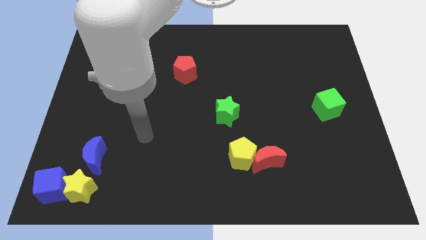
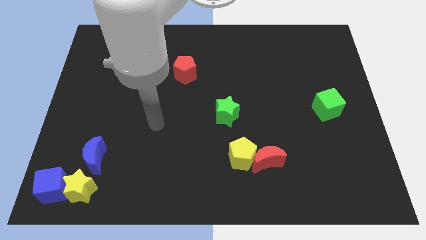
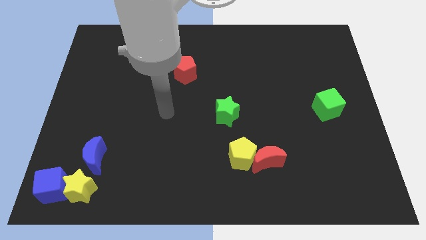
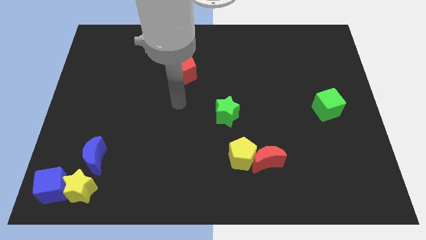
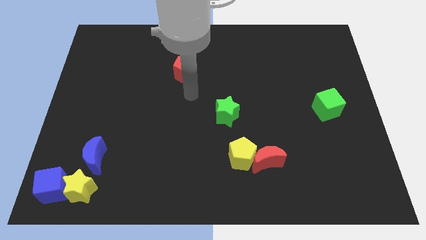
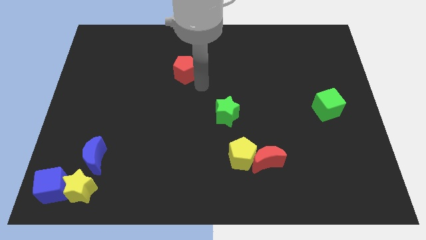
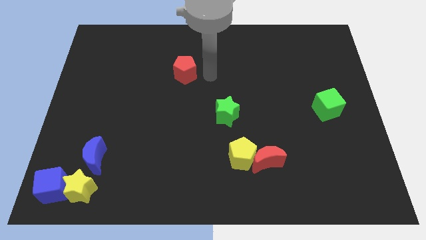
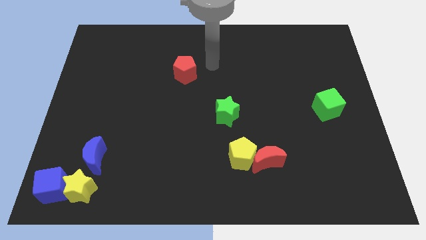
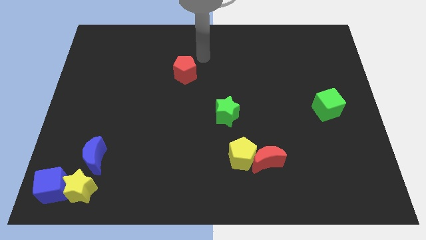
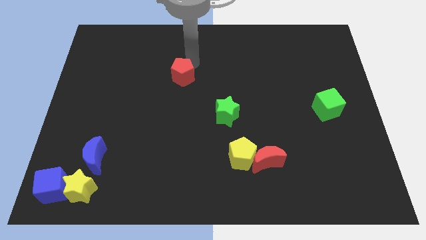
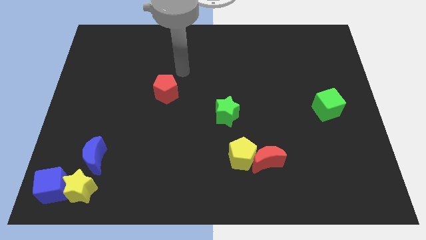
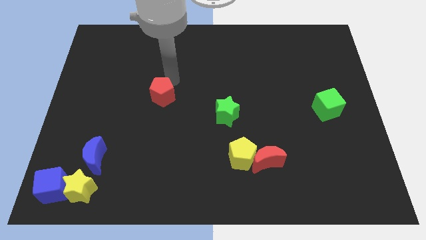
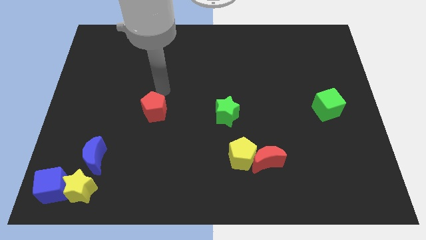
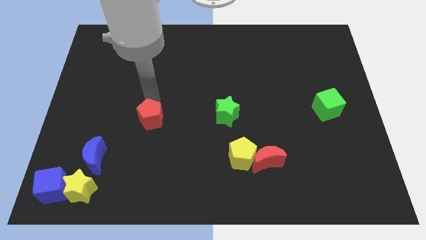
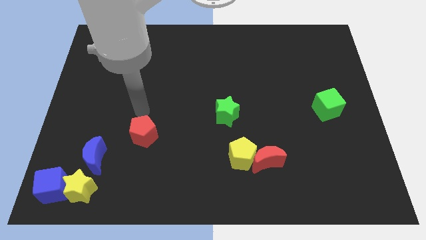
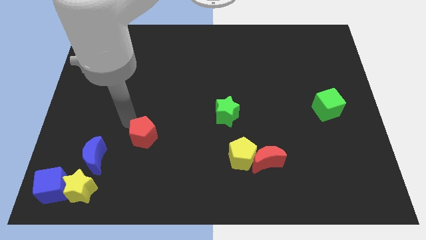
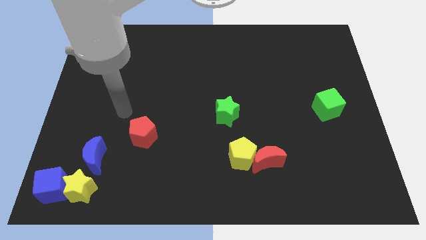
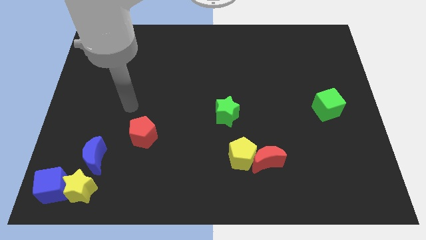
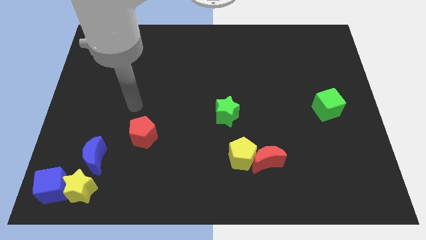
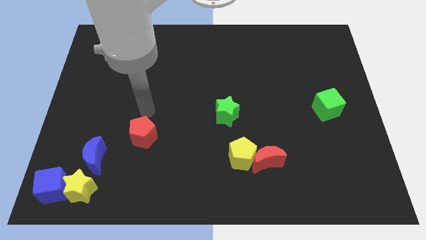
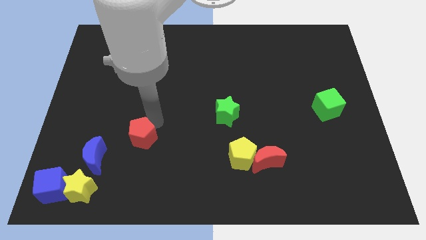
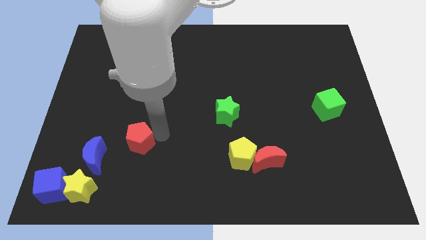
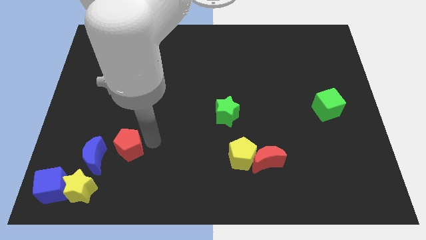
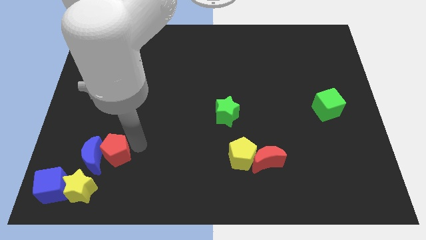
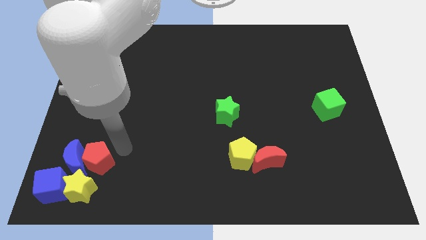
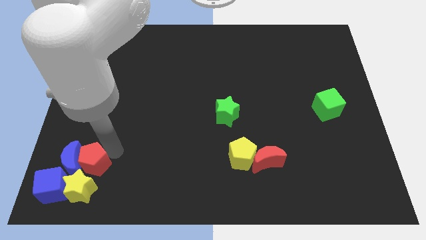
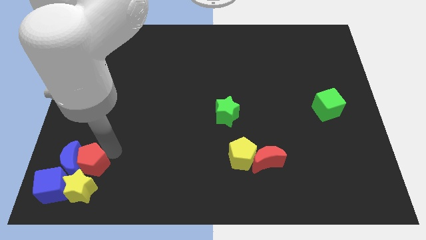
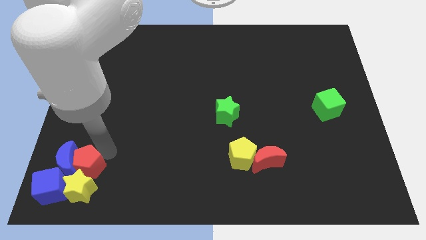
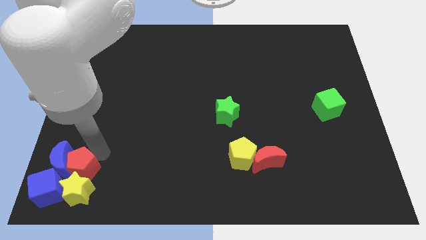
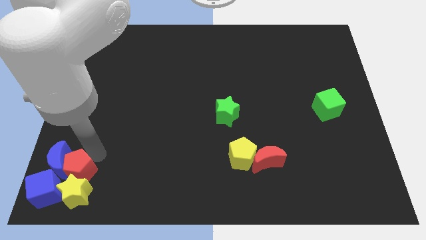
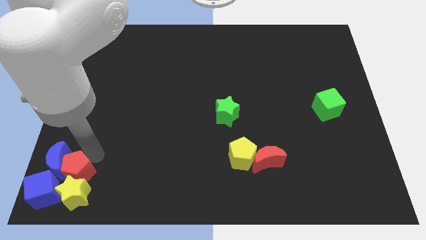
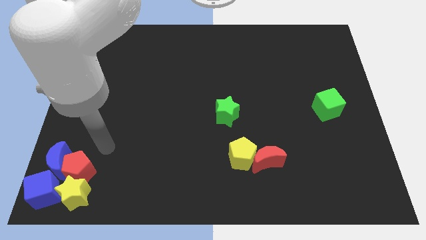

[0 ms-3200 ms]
push the red pentagon into the group of blocks in bottom left

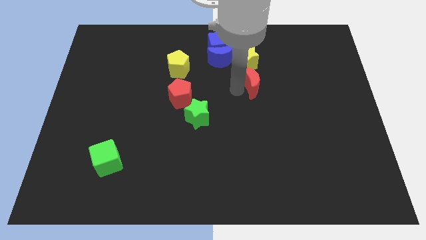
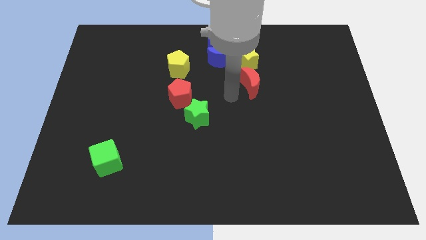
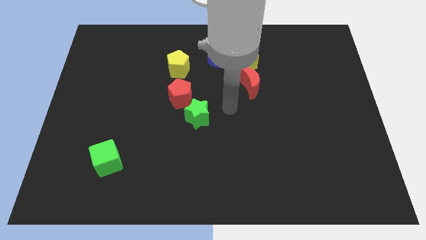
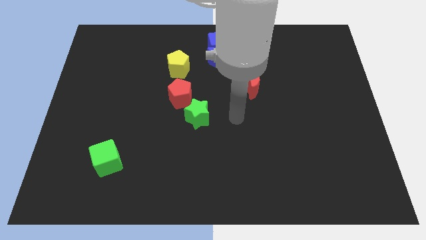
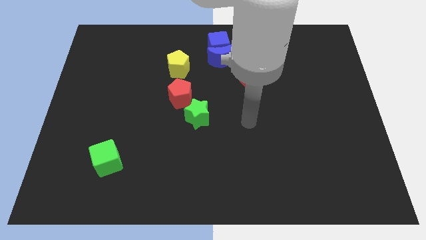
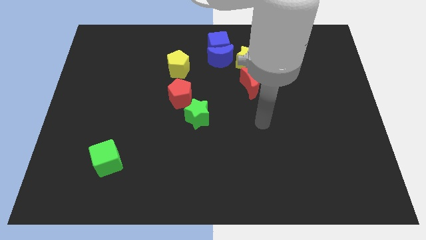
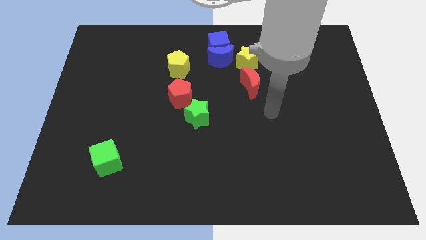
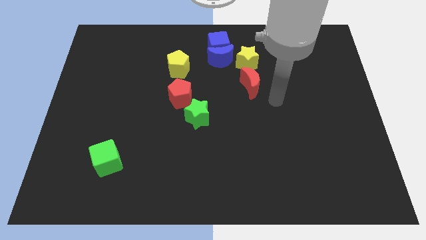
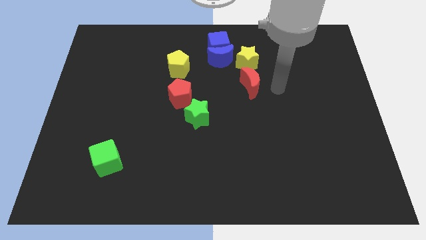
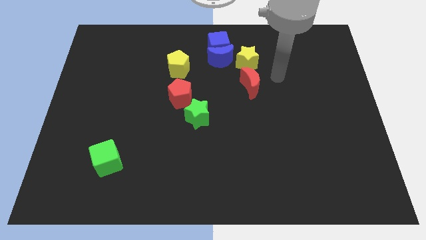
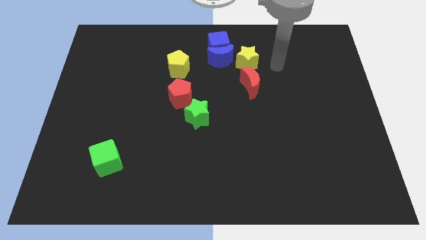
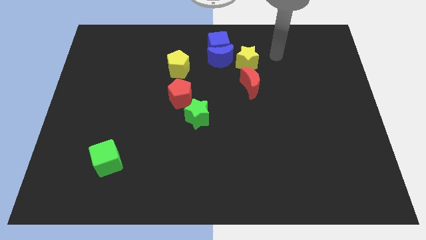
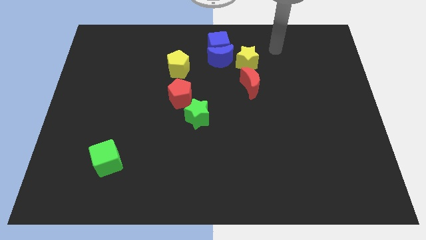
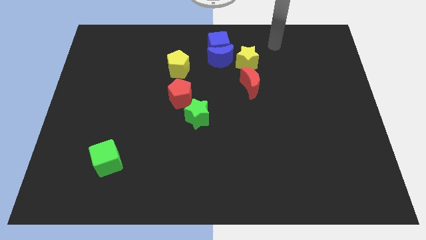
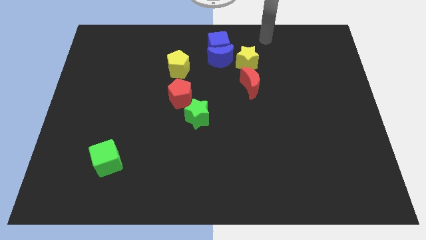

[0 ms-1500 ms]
move your arm away from the red moon

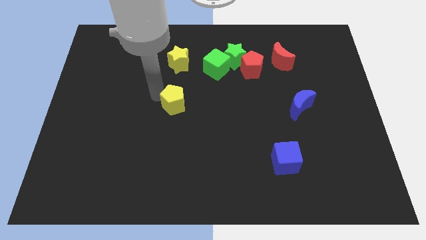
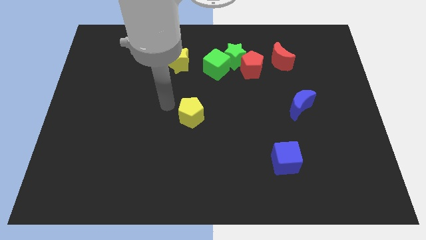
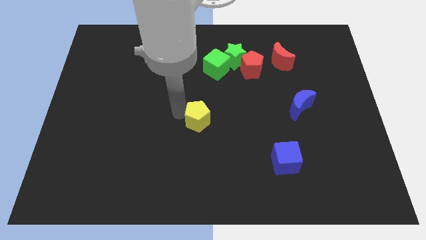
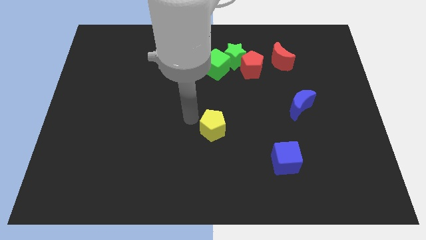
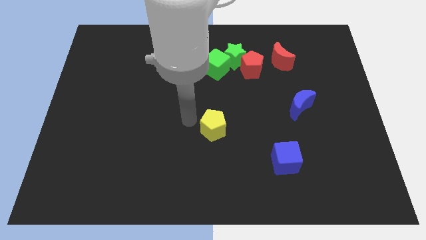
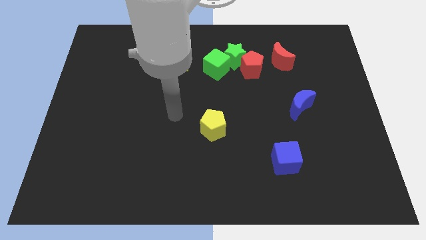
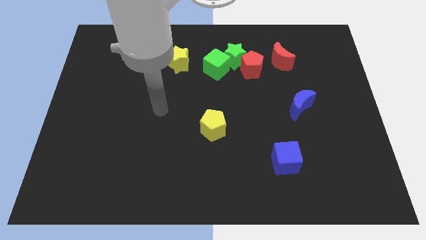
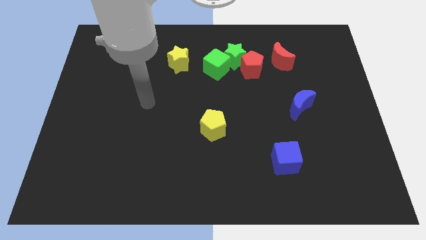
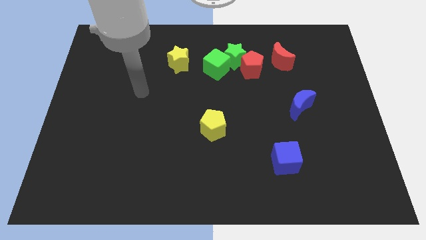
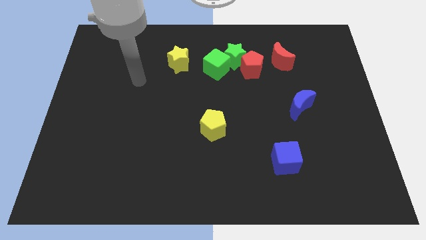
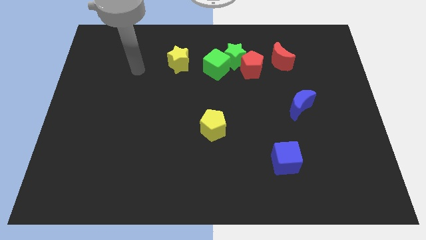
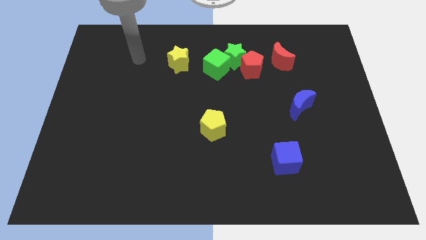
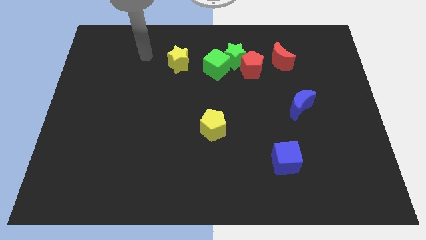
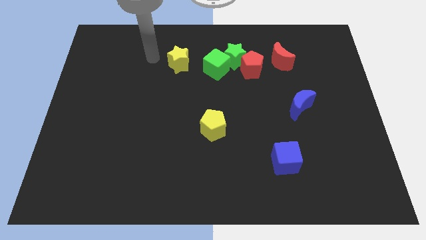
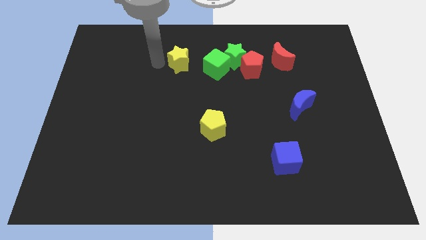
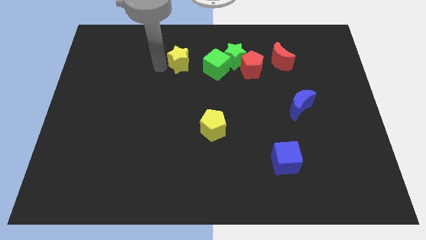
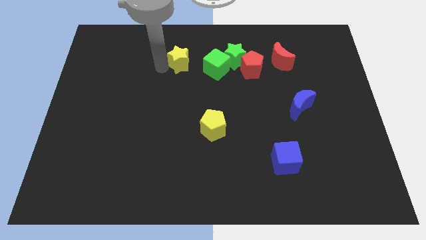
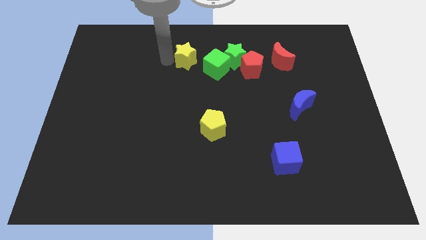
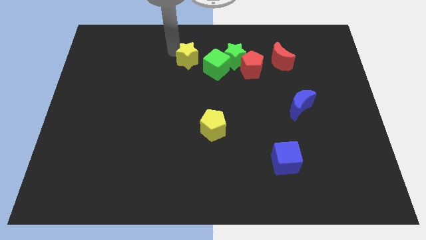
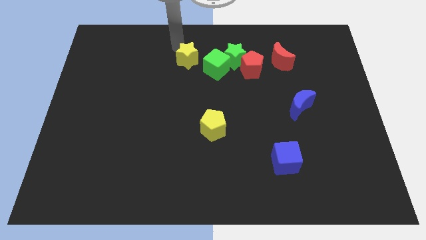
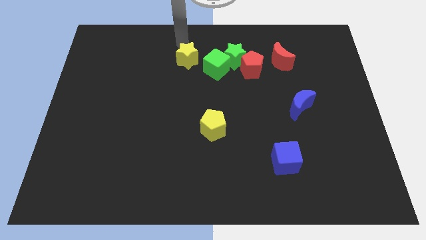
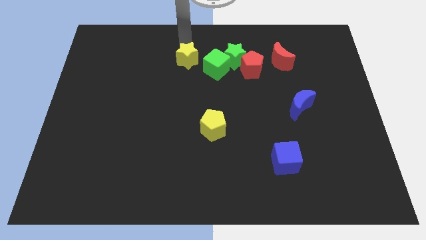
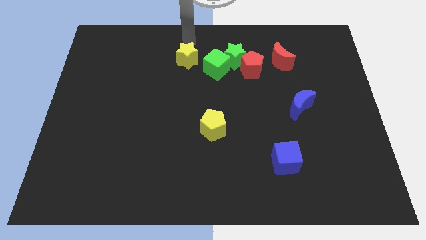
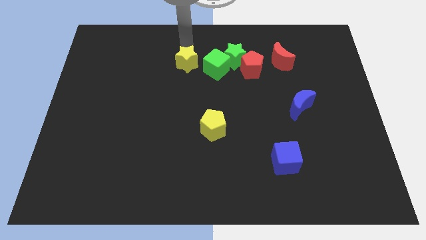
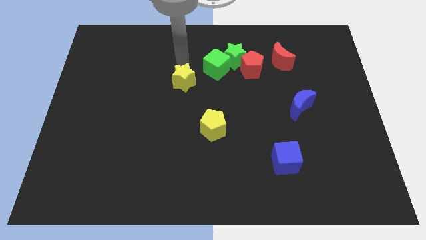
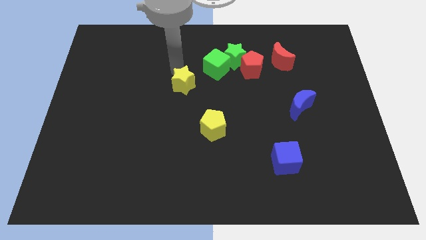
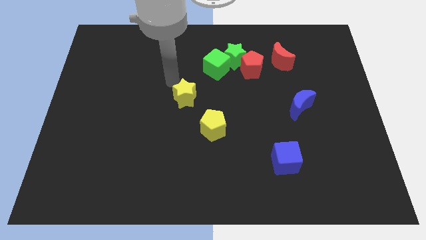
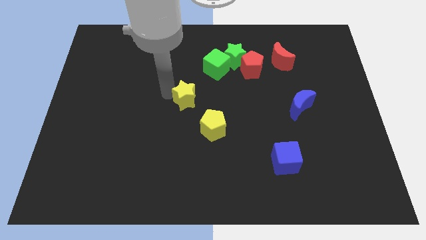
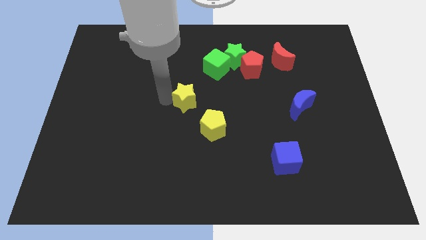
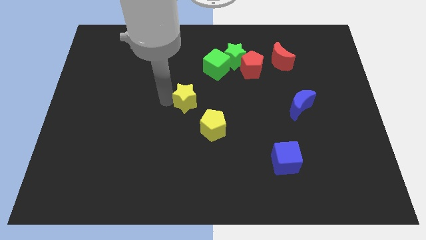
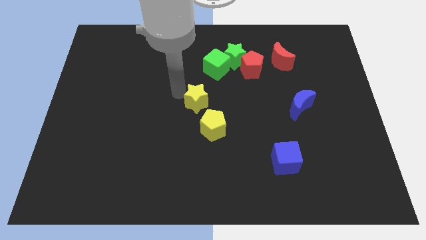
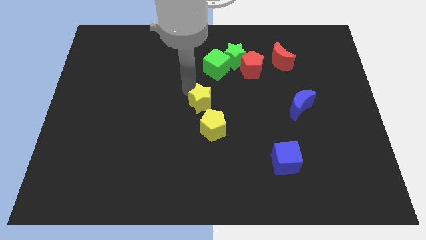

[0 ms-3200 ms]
place the yellow blocks diagonally in the middle of the board

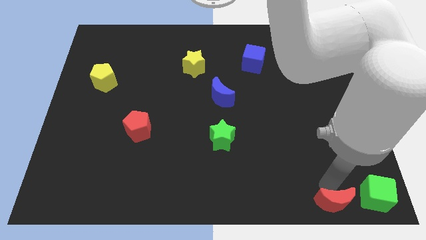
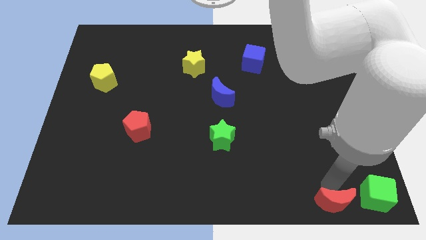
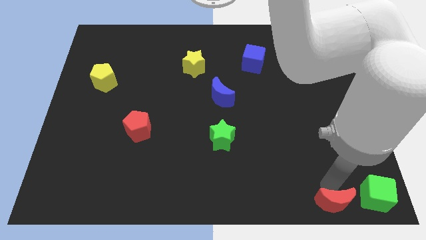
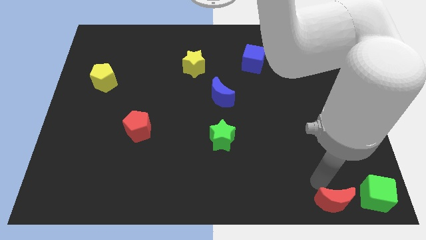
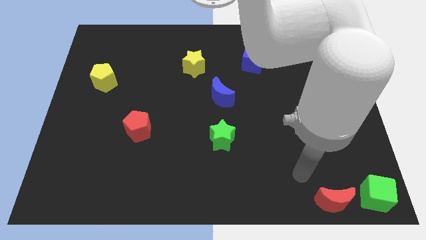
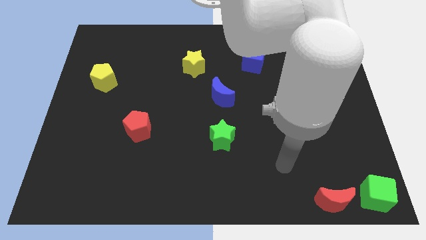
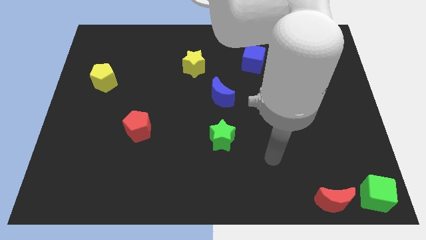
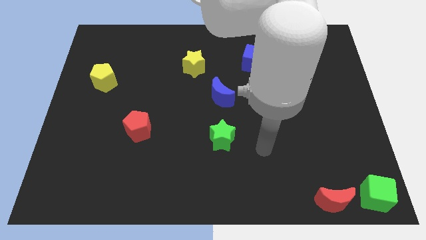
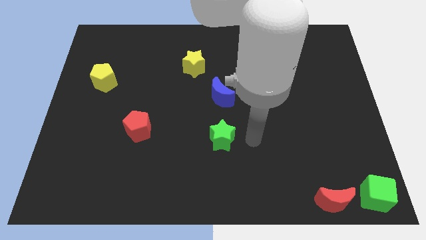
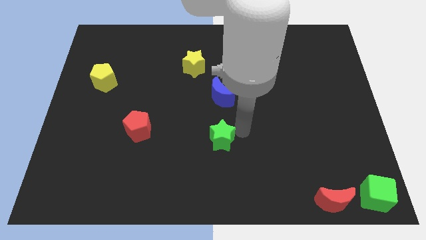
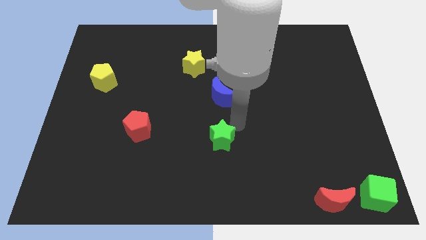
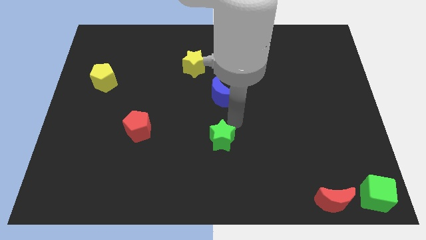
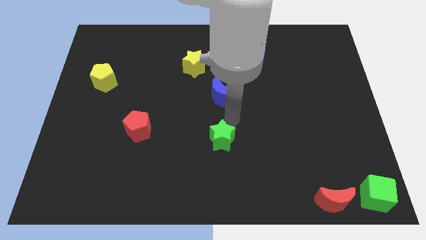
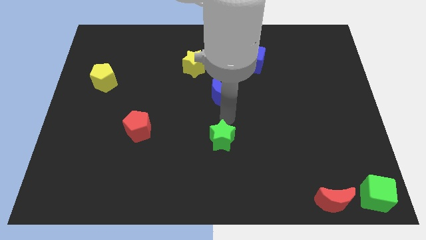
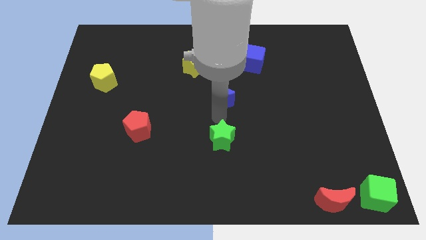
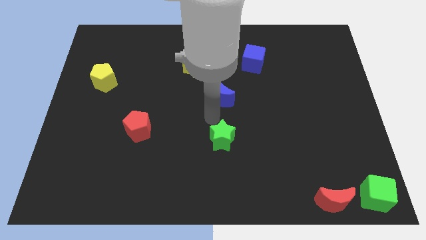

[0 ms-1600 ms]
place your arm above the green star
